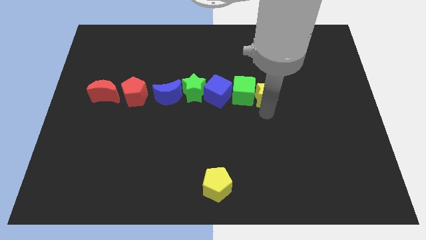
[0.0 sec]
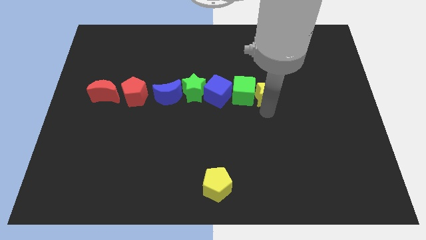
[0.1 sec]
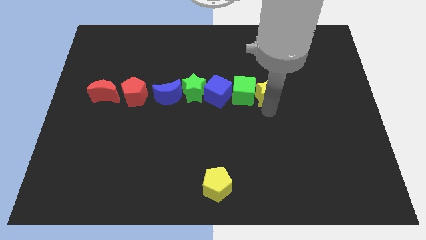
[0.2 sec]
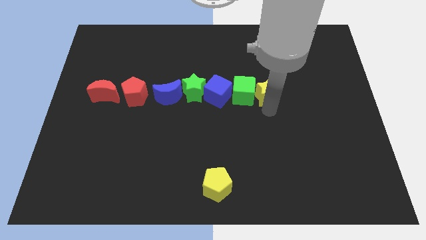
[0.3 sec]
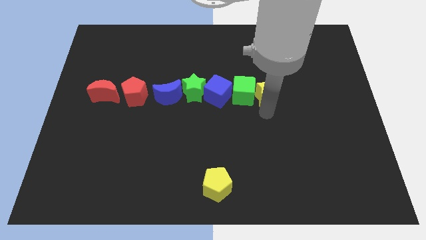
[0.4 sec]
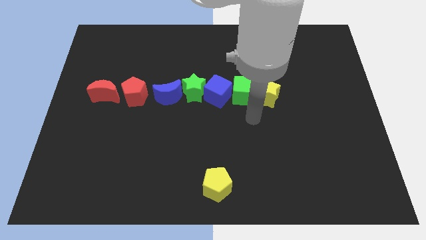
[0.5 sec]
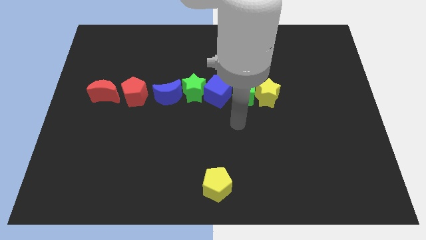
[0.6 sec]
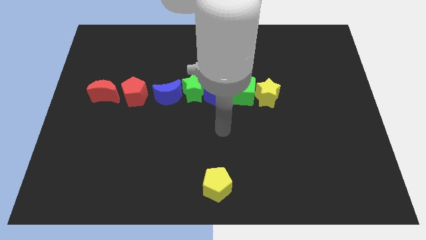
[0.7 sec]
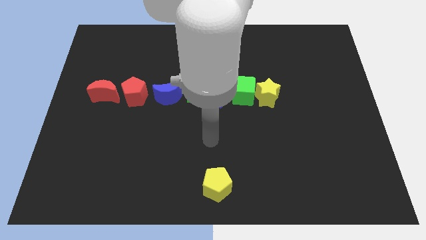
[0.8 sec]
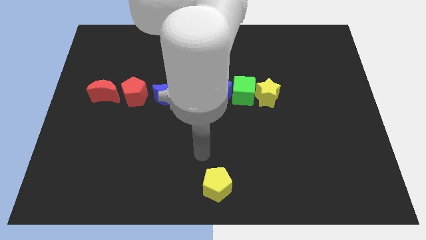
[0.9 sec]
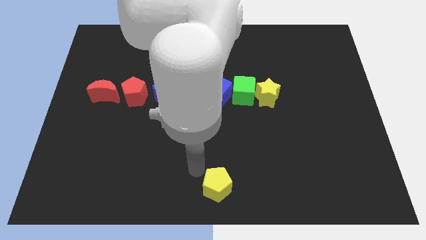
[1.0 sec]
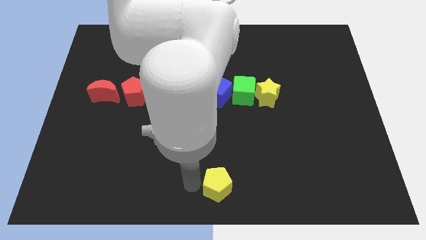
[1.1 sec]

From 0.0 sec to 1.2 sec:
move your arm away from the yellow star

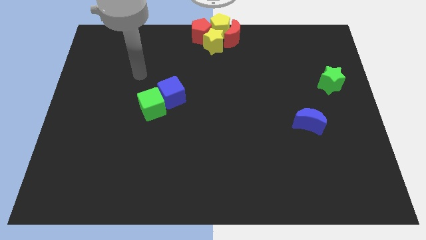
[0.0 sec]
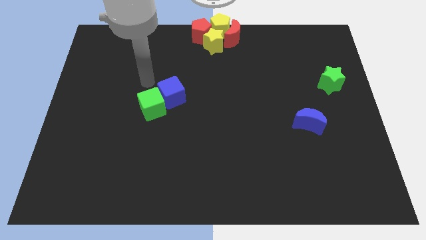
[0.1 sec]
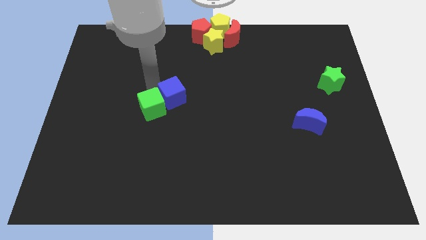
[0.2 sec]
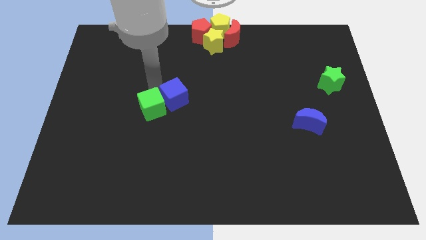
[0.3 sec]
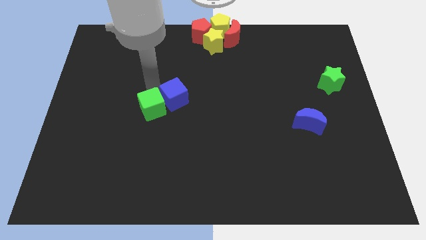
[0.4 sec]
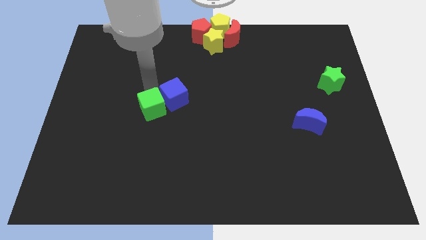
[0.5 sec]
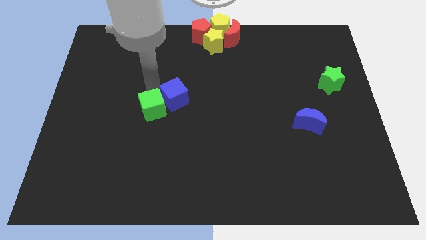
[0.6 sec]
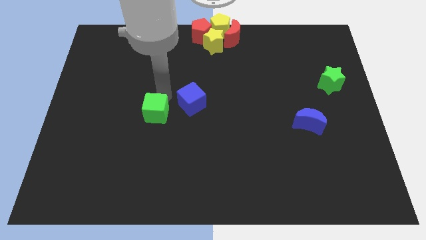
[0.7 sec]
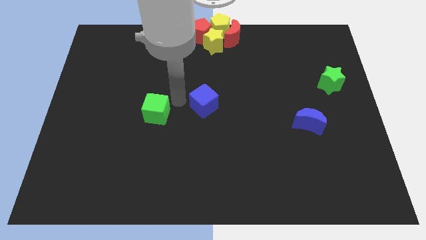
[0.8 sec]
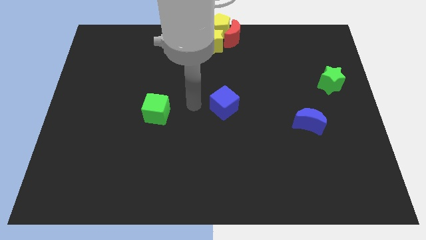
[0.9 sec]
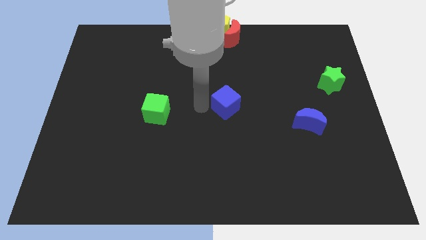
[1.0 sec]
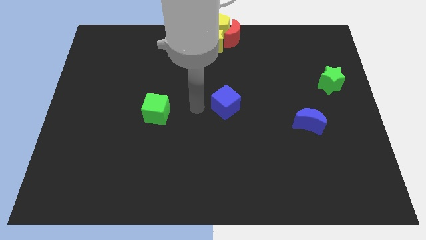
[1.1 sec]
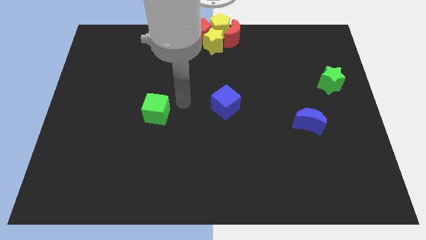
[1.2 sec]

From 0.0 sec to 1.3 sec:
separate the blue cube from green cube

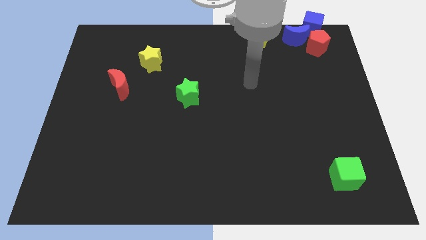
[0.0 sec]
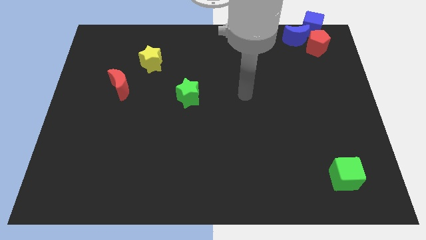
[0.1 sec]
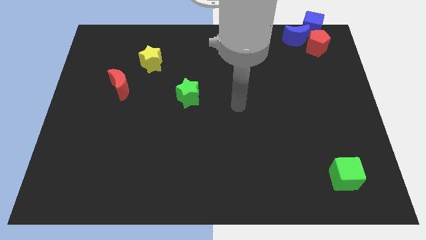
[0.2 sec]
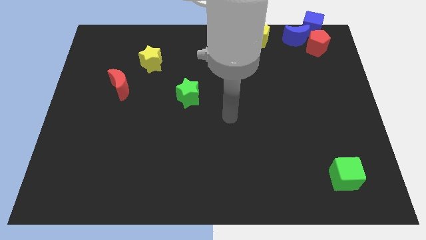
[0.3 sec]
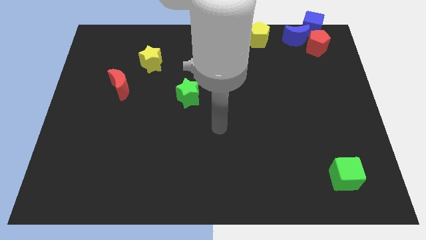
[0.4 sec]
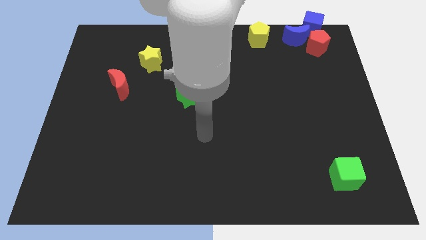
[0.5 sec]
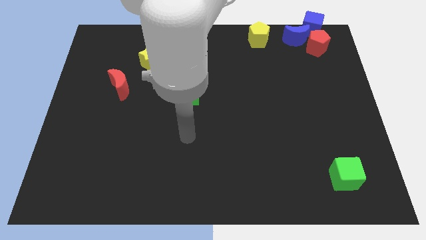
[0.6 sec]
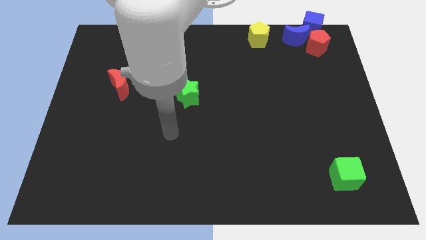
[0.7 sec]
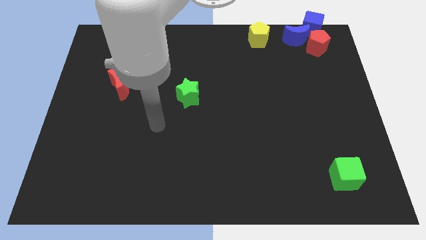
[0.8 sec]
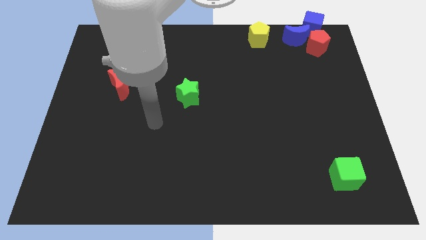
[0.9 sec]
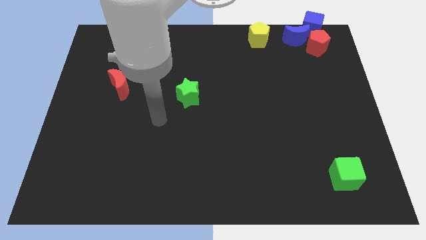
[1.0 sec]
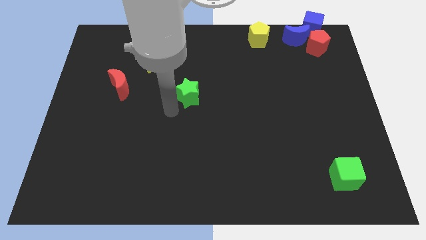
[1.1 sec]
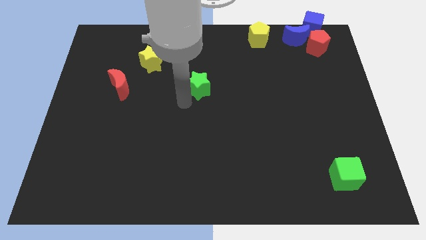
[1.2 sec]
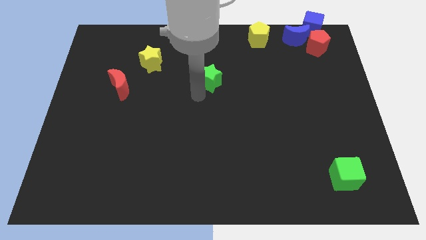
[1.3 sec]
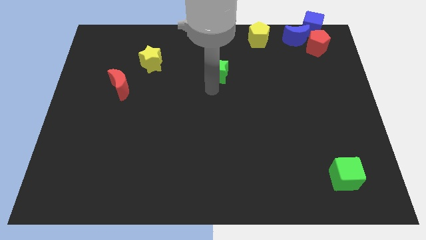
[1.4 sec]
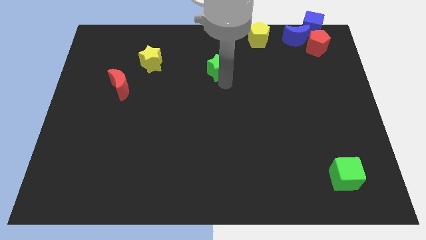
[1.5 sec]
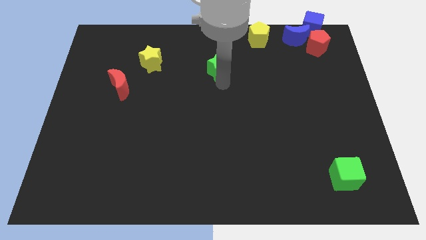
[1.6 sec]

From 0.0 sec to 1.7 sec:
push the green star towards the yellow pentagon

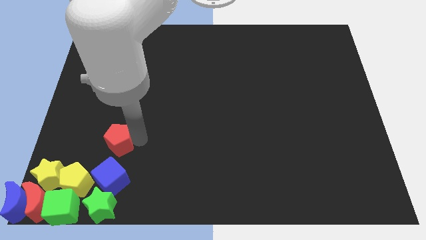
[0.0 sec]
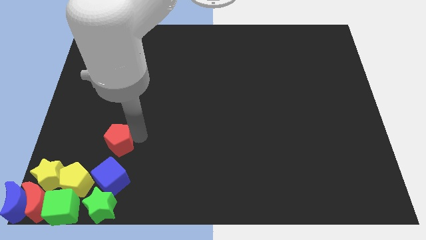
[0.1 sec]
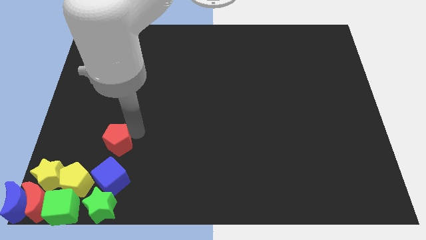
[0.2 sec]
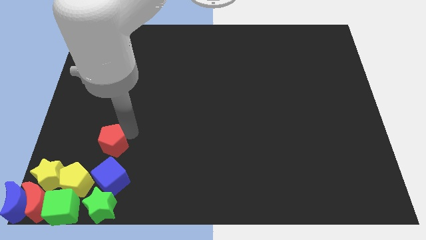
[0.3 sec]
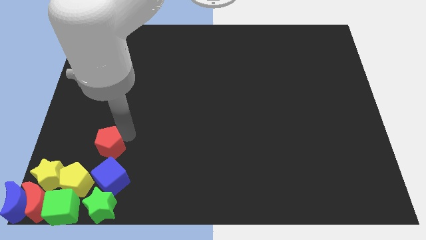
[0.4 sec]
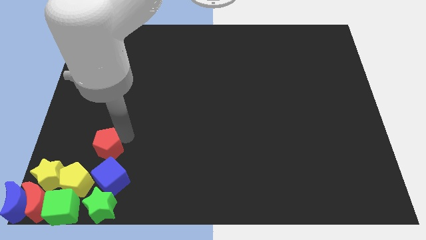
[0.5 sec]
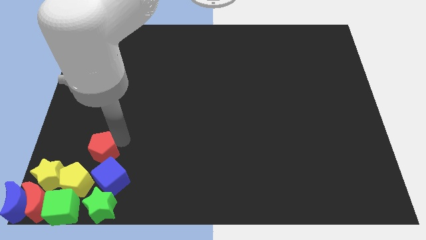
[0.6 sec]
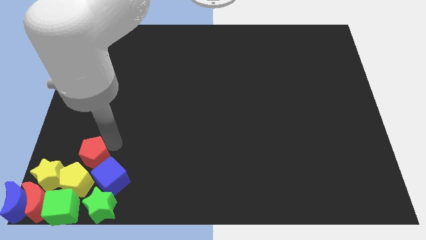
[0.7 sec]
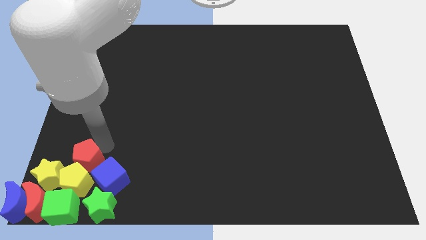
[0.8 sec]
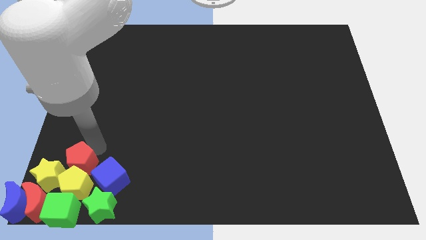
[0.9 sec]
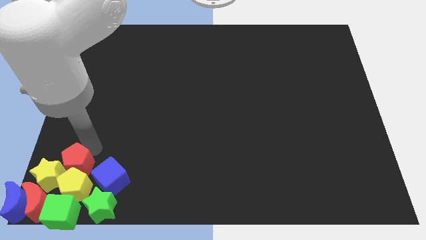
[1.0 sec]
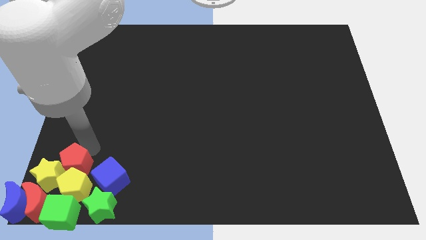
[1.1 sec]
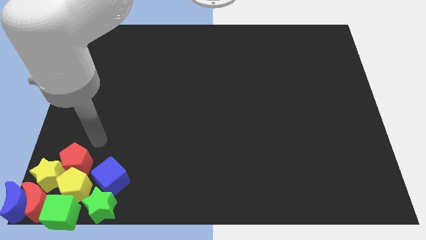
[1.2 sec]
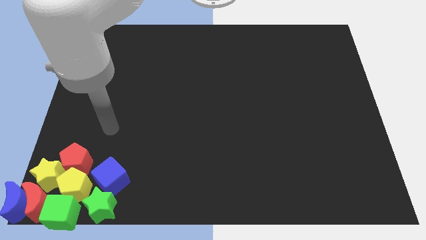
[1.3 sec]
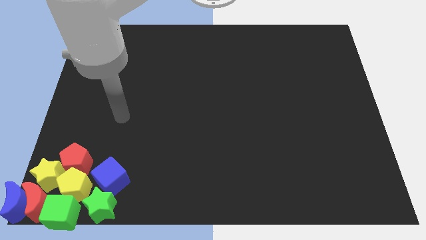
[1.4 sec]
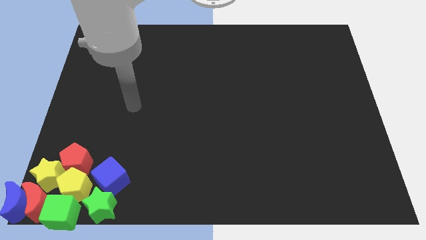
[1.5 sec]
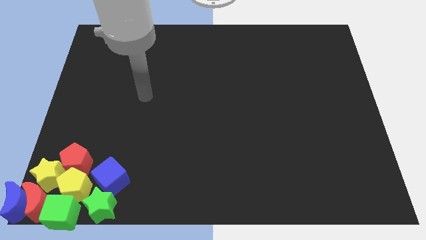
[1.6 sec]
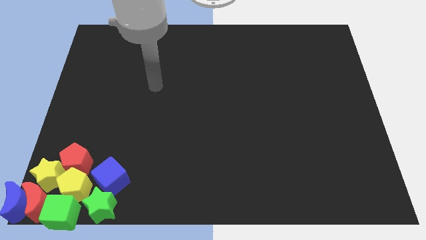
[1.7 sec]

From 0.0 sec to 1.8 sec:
move the red pentagon to the top of the yellow pentagon

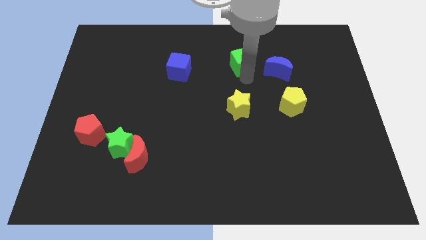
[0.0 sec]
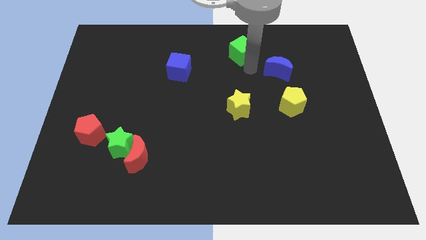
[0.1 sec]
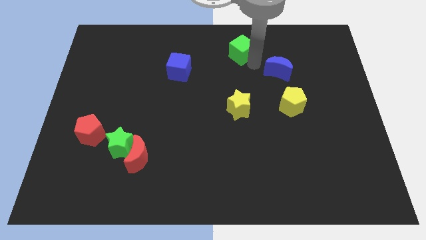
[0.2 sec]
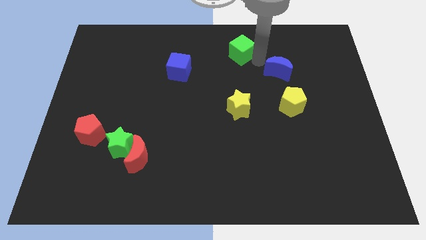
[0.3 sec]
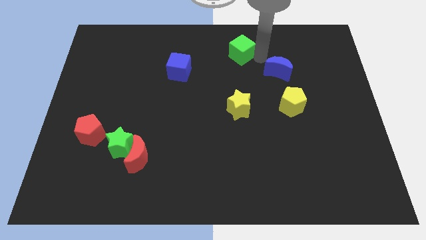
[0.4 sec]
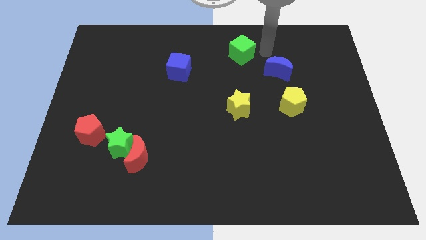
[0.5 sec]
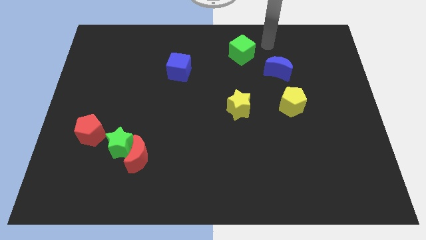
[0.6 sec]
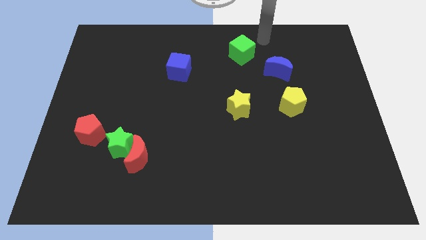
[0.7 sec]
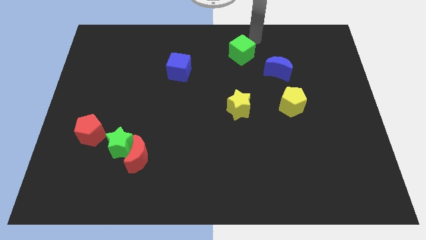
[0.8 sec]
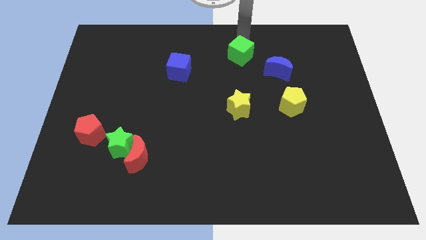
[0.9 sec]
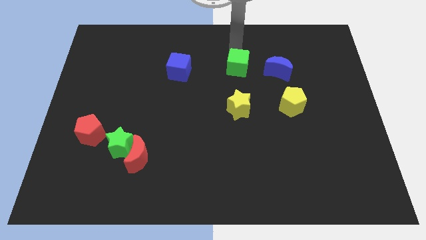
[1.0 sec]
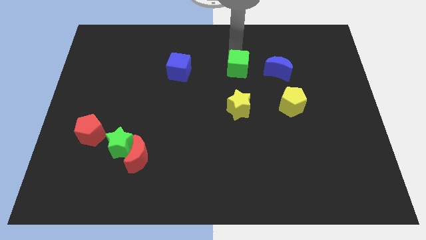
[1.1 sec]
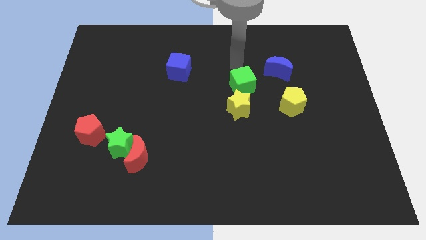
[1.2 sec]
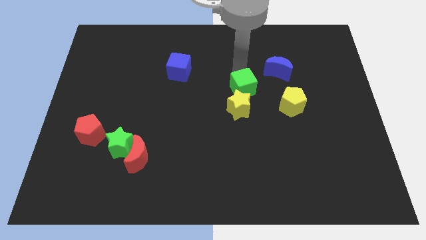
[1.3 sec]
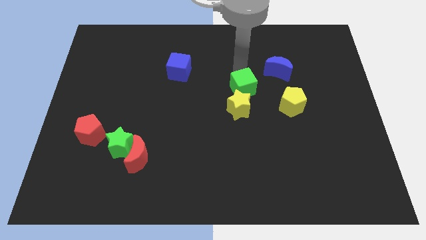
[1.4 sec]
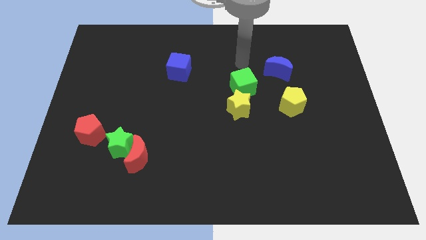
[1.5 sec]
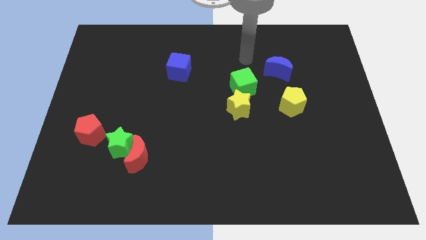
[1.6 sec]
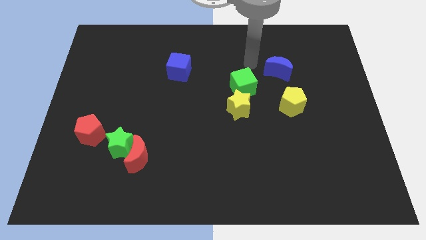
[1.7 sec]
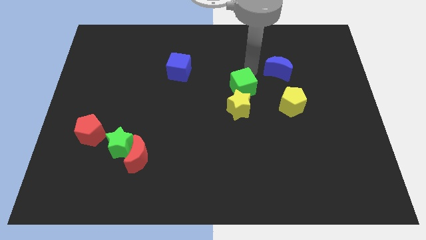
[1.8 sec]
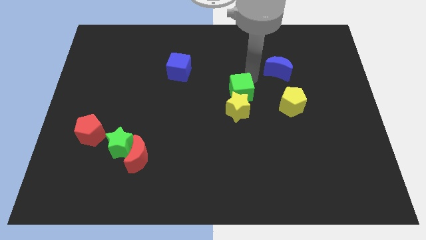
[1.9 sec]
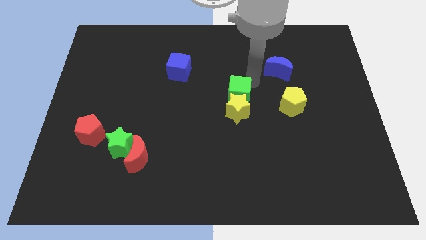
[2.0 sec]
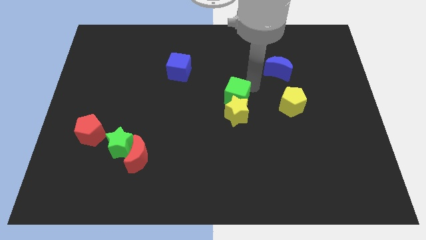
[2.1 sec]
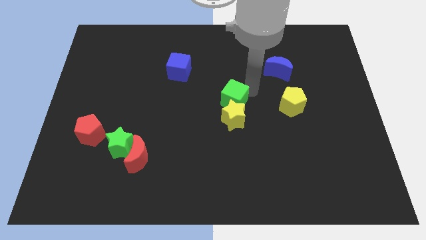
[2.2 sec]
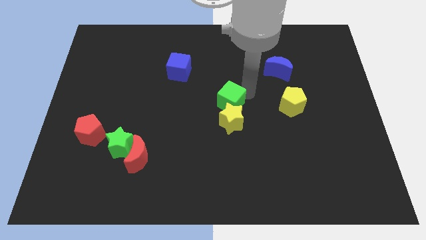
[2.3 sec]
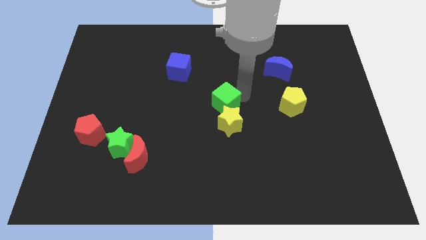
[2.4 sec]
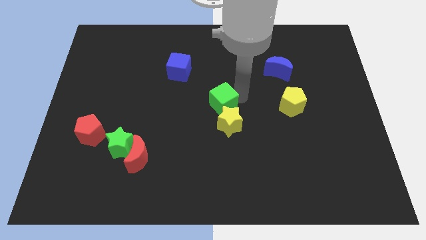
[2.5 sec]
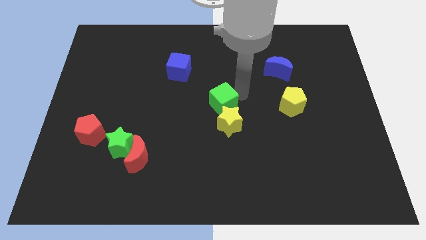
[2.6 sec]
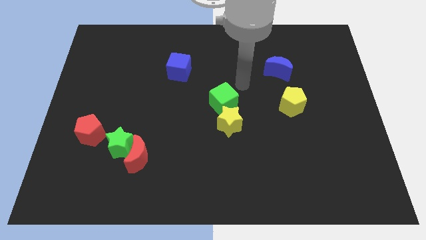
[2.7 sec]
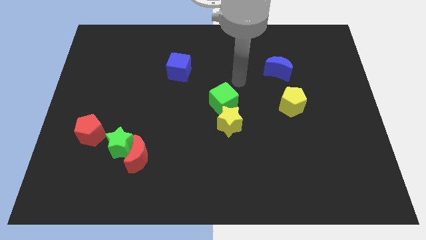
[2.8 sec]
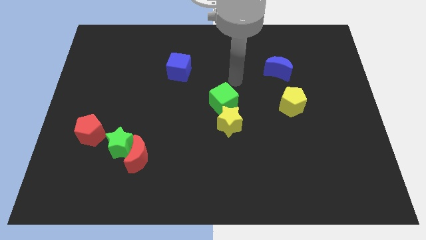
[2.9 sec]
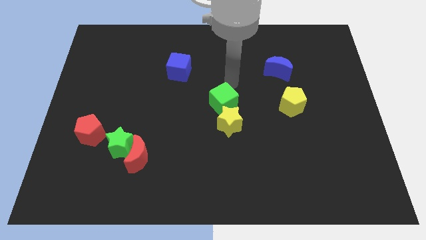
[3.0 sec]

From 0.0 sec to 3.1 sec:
adjust the green cube on the top of the yellow star
